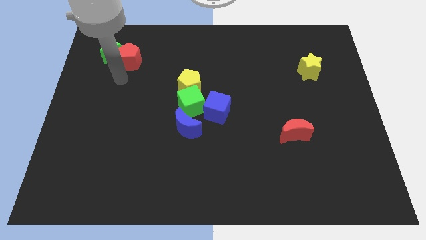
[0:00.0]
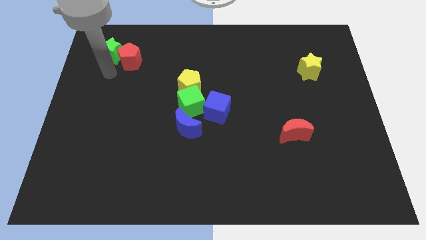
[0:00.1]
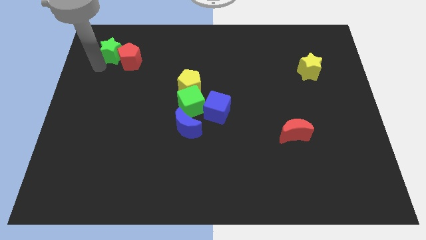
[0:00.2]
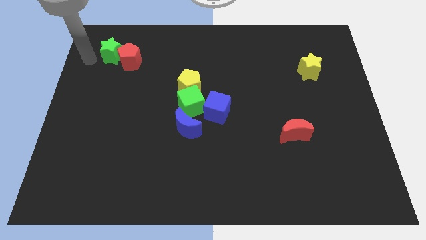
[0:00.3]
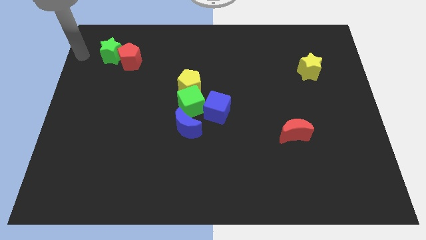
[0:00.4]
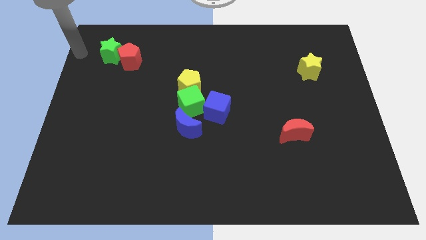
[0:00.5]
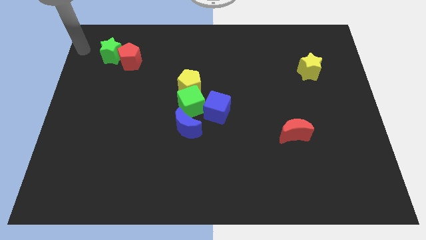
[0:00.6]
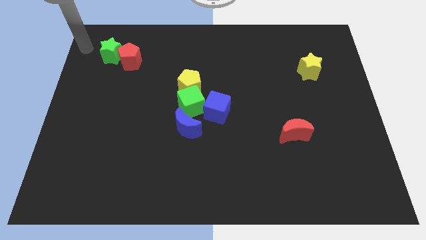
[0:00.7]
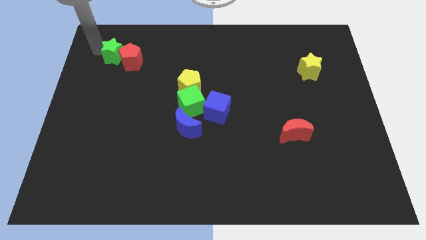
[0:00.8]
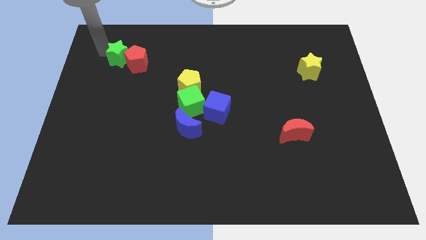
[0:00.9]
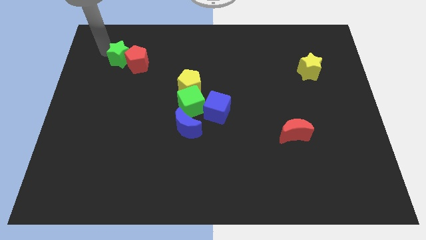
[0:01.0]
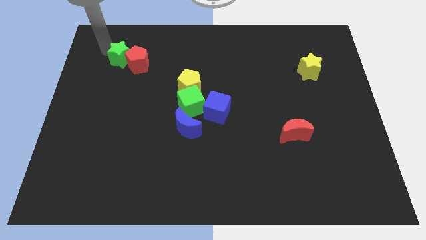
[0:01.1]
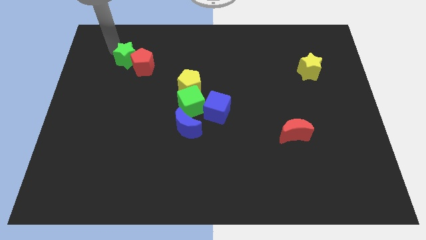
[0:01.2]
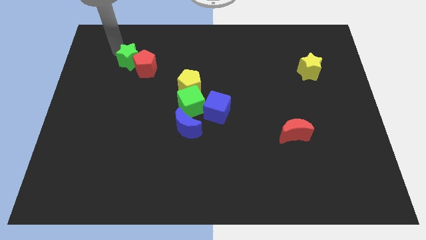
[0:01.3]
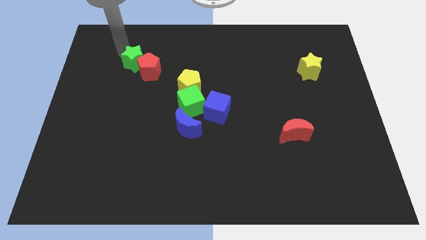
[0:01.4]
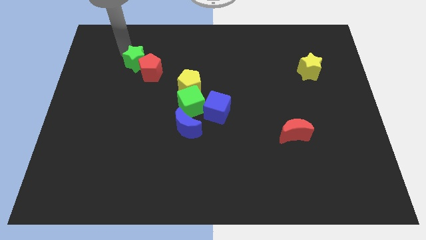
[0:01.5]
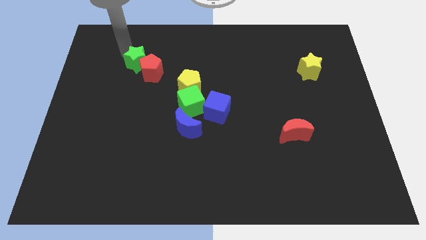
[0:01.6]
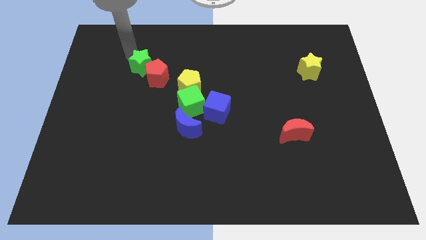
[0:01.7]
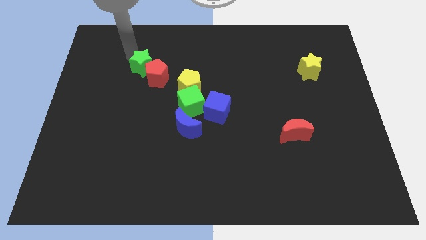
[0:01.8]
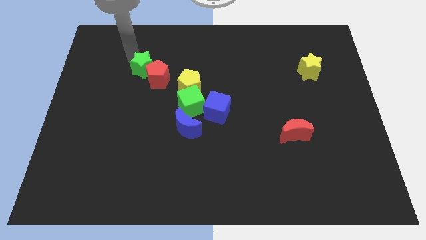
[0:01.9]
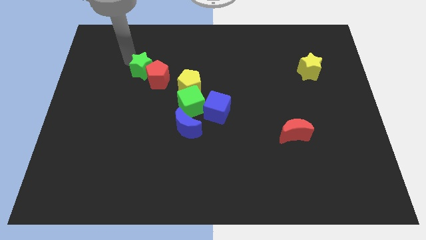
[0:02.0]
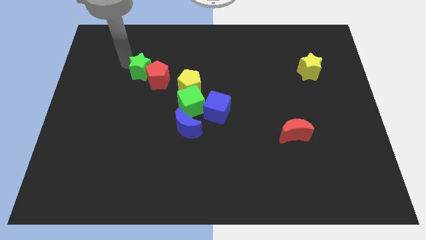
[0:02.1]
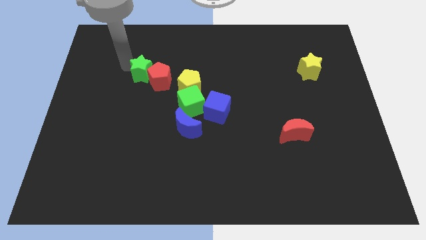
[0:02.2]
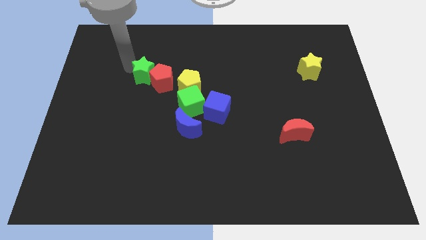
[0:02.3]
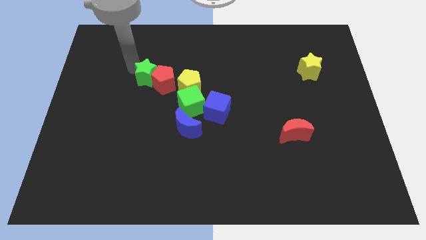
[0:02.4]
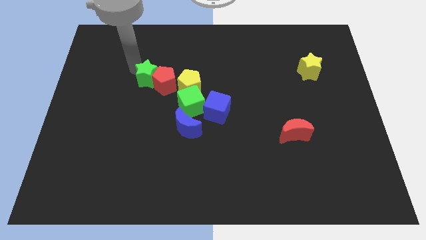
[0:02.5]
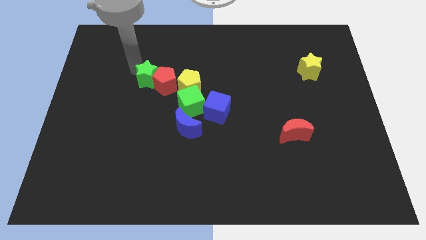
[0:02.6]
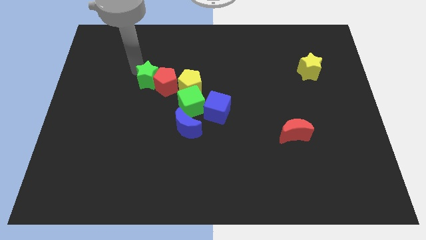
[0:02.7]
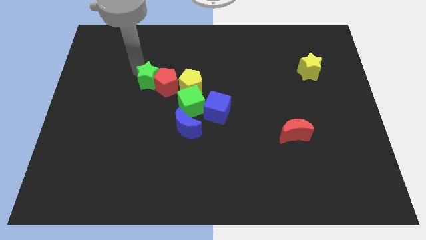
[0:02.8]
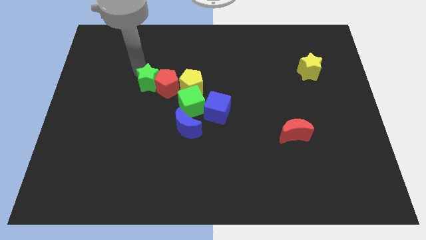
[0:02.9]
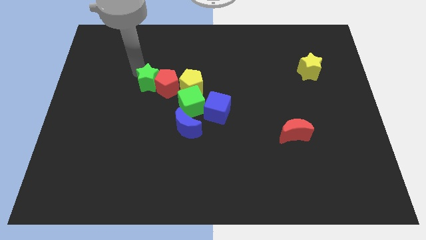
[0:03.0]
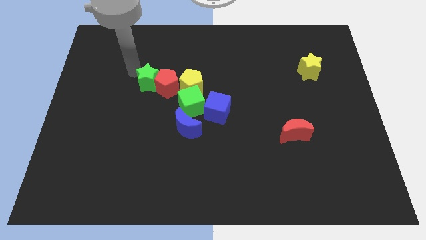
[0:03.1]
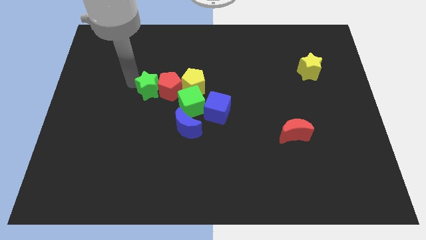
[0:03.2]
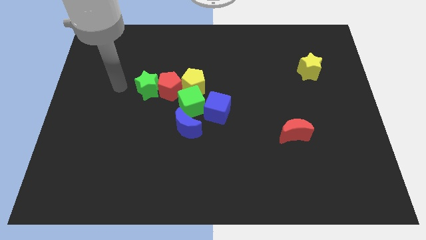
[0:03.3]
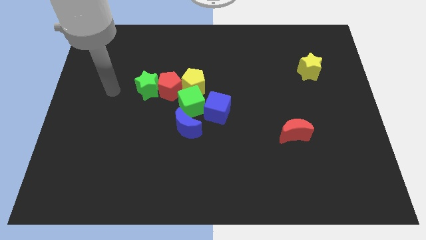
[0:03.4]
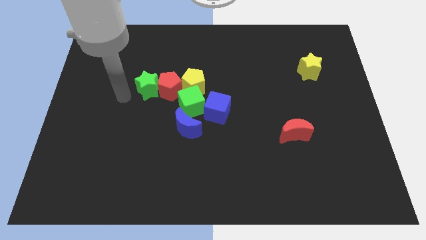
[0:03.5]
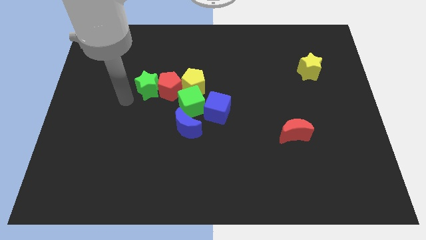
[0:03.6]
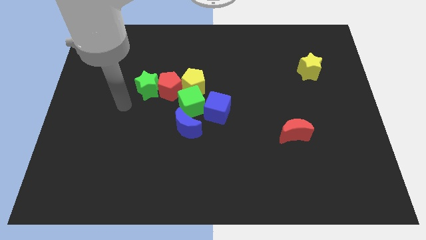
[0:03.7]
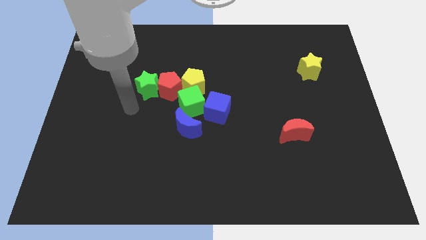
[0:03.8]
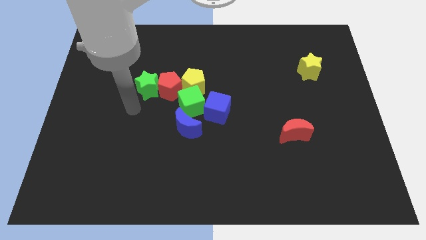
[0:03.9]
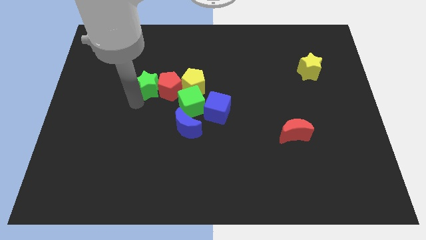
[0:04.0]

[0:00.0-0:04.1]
push the green star and the red pentagon into the yellow pentagon

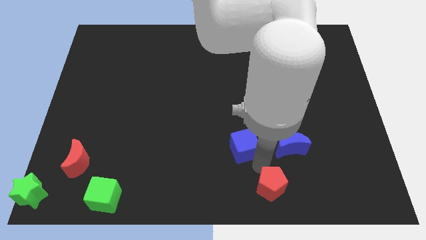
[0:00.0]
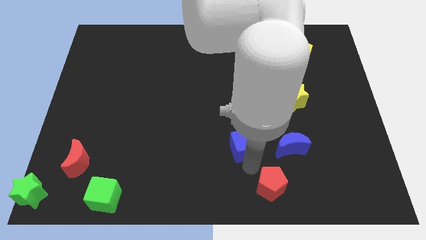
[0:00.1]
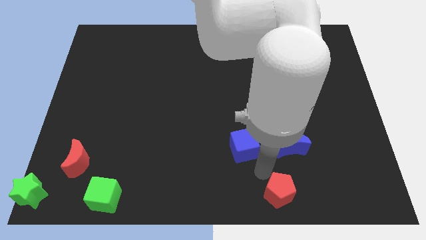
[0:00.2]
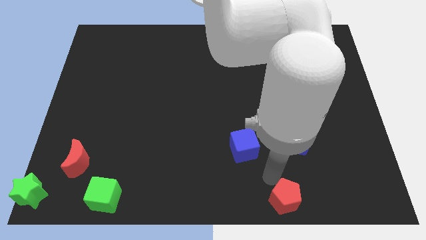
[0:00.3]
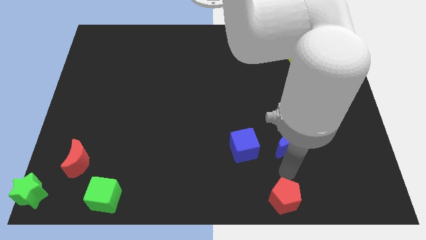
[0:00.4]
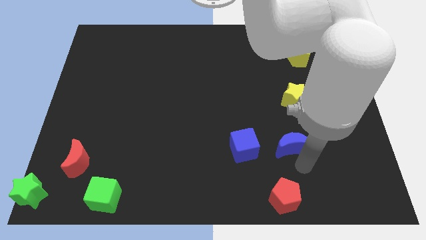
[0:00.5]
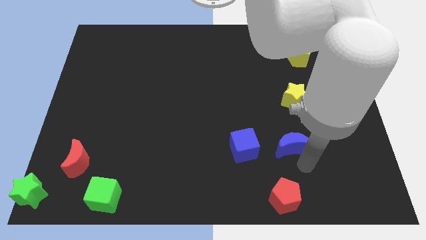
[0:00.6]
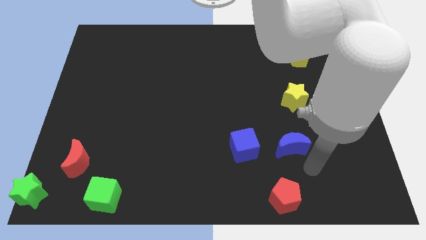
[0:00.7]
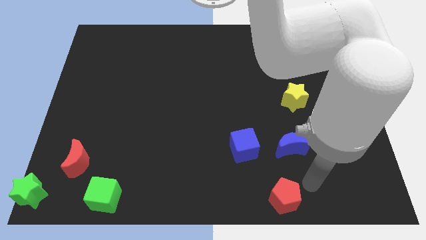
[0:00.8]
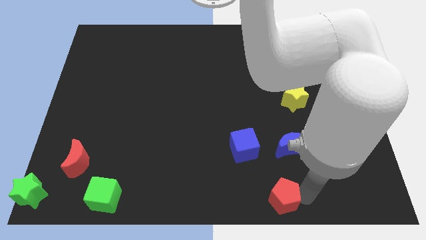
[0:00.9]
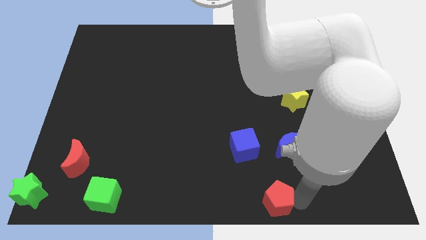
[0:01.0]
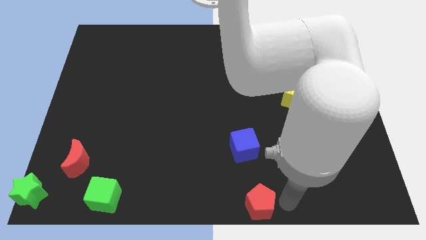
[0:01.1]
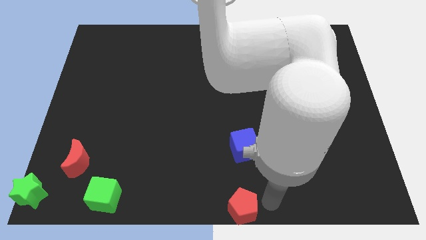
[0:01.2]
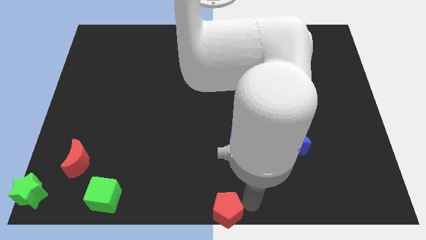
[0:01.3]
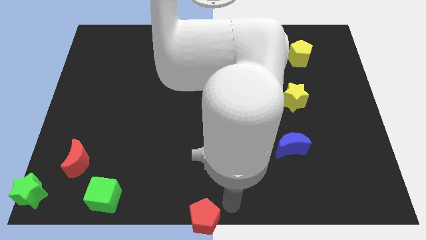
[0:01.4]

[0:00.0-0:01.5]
move the red pentagon to the bottom center

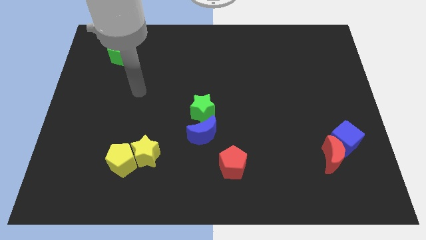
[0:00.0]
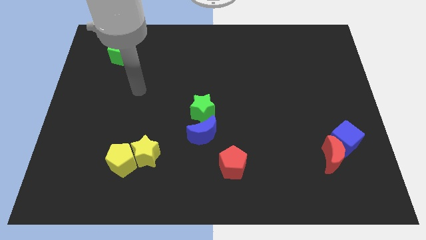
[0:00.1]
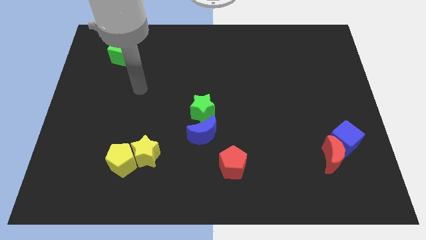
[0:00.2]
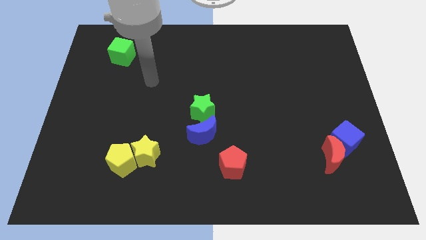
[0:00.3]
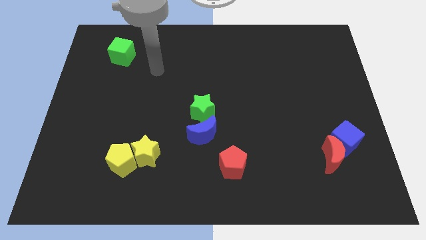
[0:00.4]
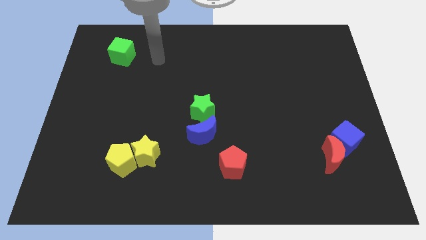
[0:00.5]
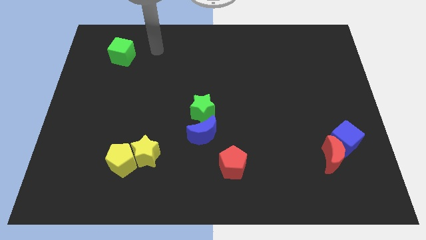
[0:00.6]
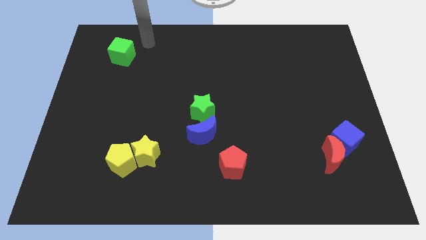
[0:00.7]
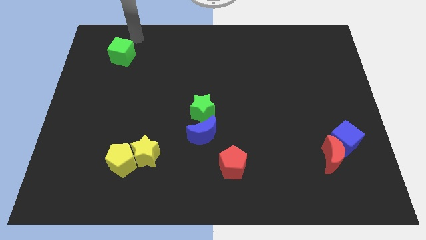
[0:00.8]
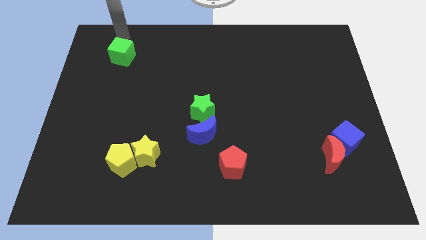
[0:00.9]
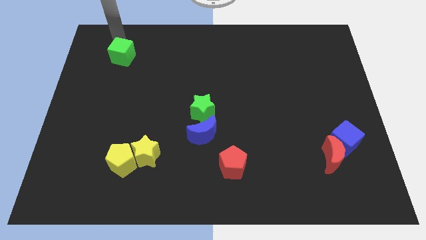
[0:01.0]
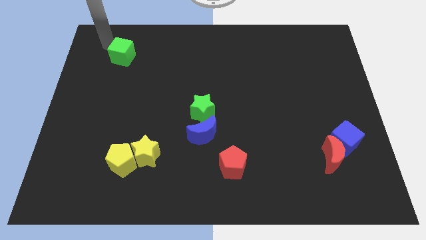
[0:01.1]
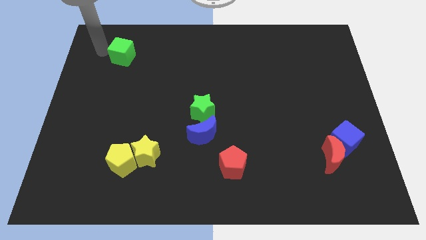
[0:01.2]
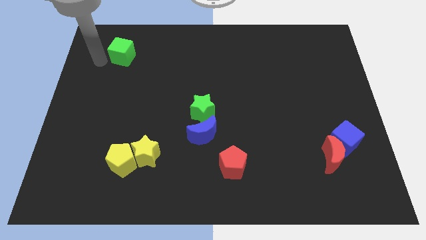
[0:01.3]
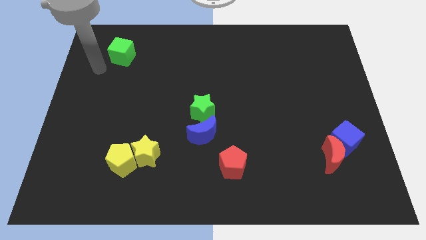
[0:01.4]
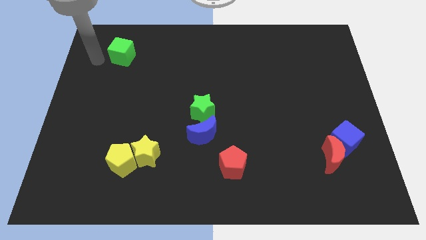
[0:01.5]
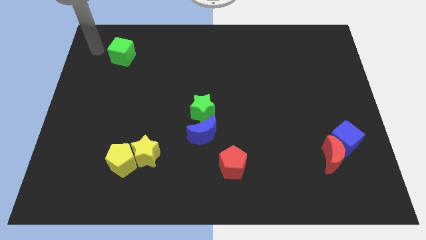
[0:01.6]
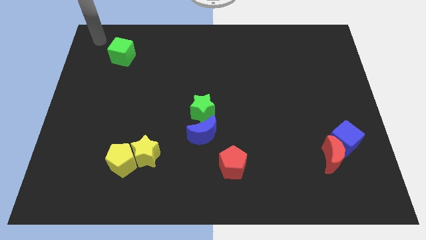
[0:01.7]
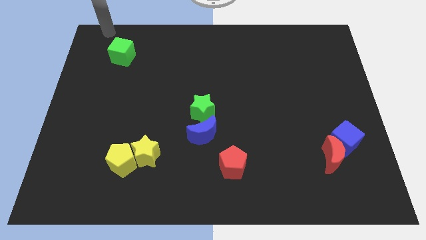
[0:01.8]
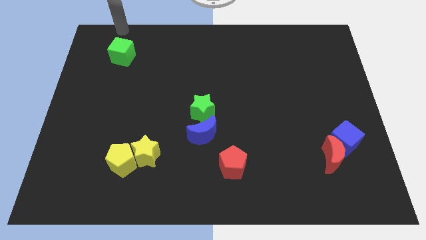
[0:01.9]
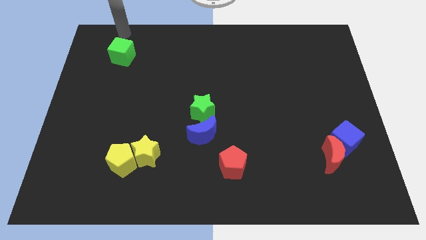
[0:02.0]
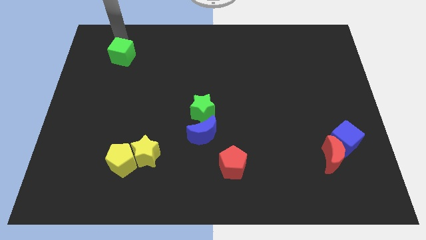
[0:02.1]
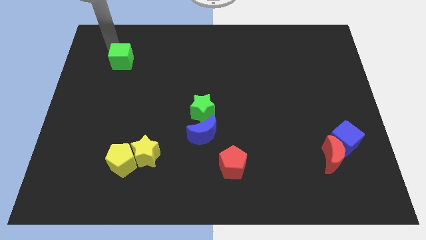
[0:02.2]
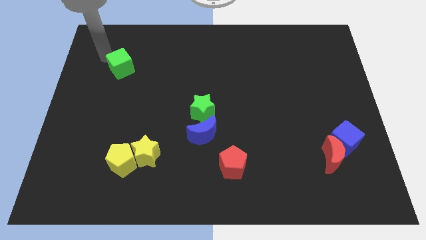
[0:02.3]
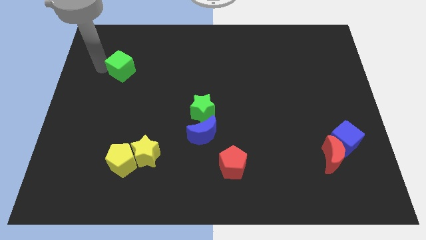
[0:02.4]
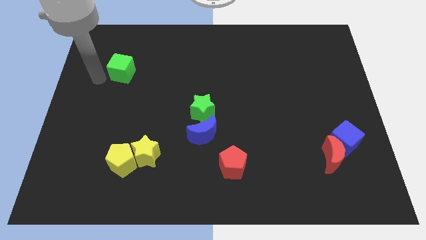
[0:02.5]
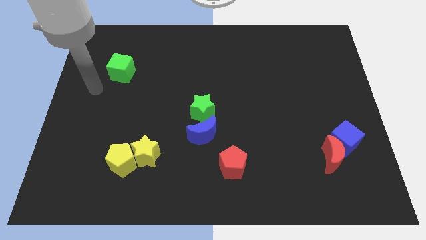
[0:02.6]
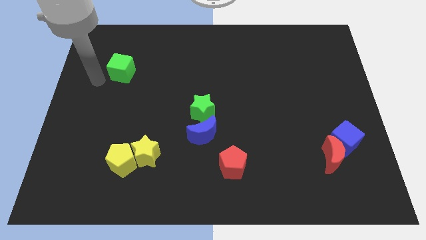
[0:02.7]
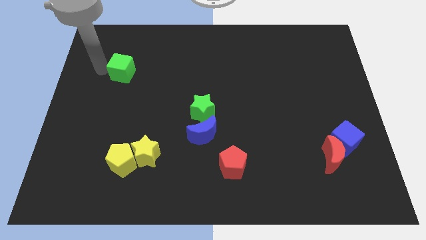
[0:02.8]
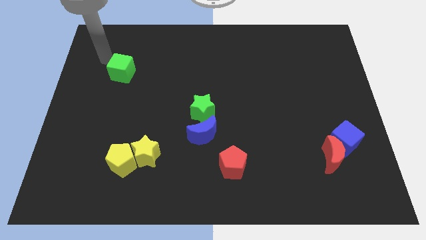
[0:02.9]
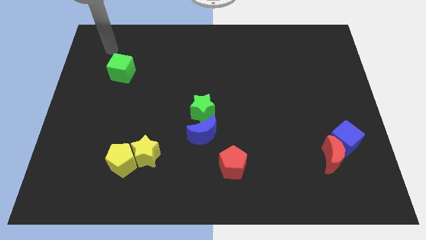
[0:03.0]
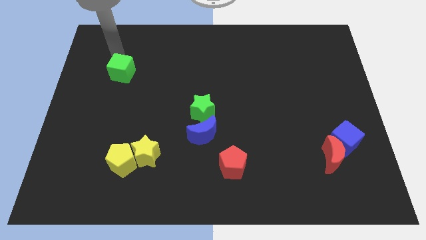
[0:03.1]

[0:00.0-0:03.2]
move the green cube slightly downwards

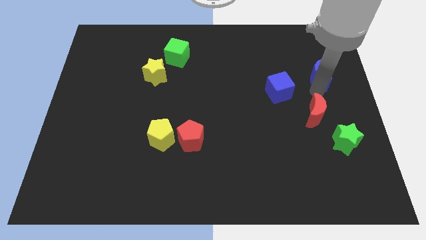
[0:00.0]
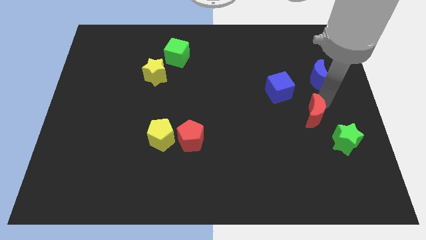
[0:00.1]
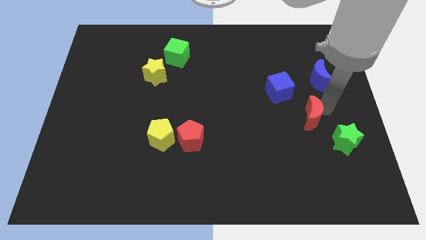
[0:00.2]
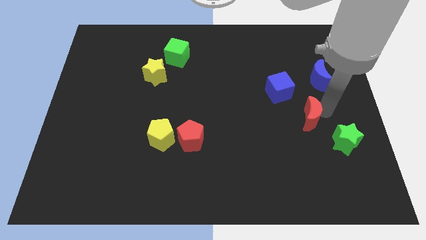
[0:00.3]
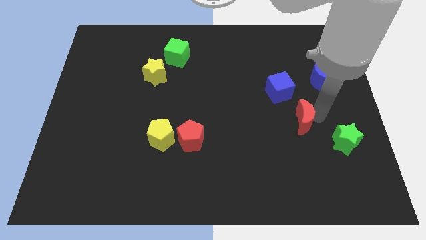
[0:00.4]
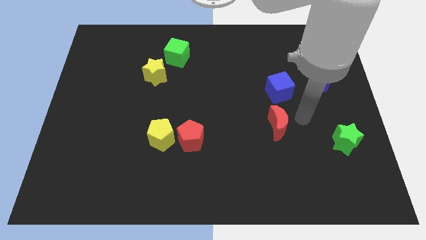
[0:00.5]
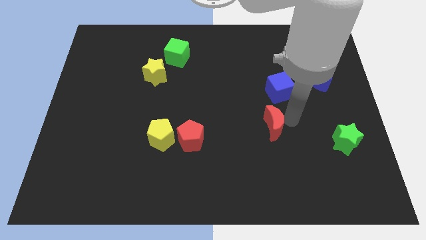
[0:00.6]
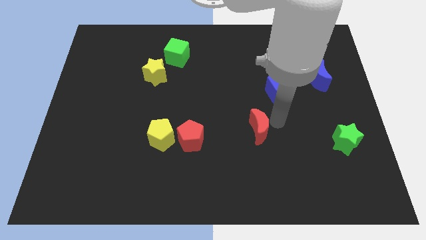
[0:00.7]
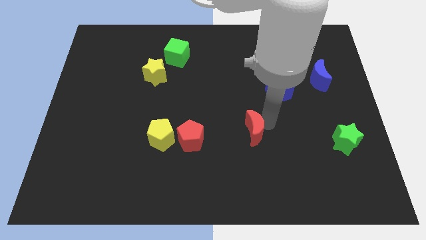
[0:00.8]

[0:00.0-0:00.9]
push the red crescent towards the center of the board
